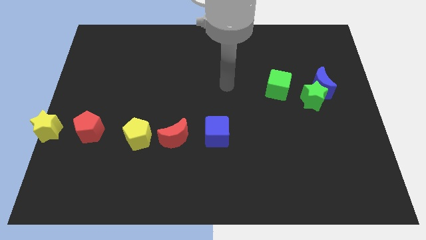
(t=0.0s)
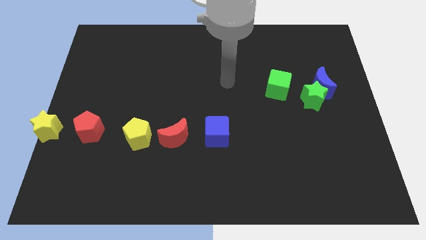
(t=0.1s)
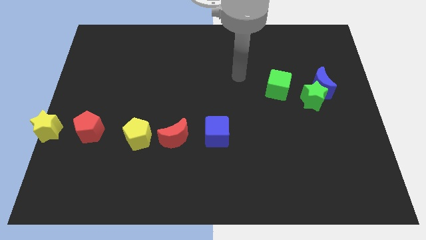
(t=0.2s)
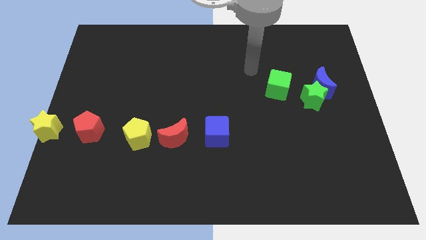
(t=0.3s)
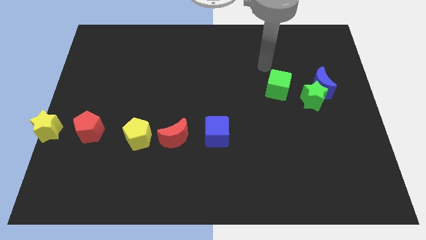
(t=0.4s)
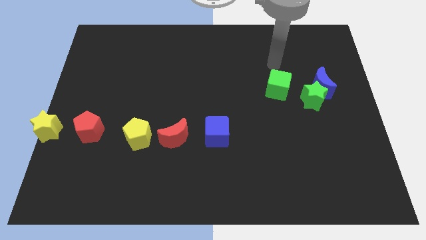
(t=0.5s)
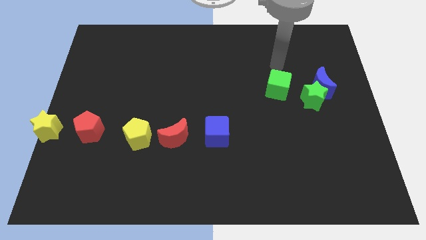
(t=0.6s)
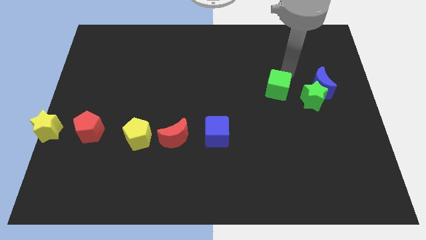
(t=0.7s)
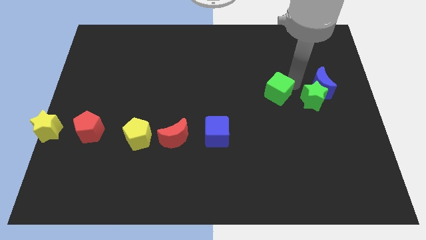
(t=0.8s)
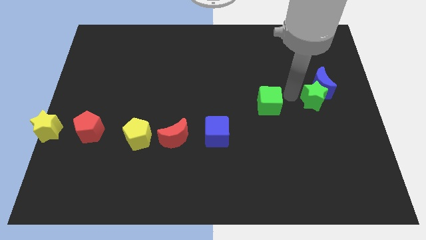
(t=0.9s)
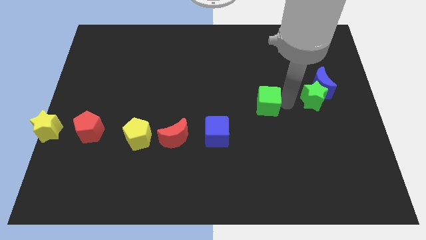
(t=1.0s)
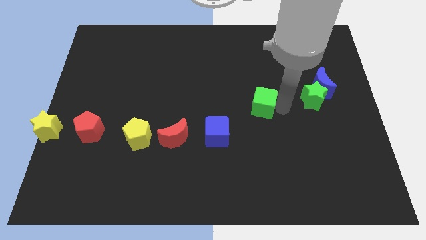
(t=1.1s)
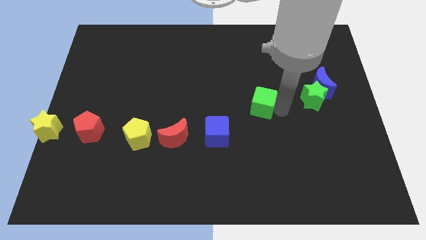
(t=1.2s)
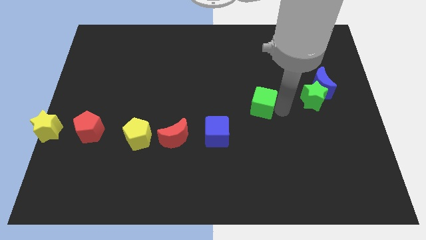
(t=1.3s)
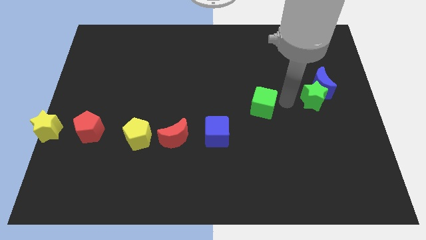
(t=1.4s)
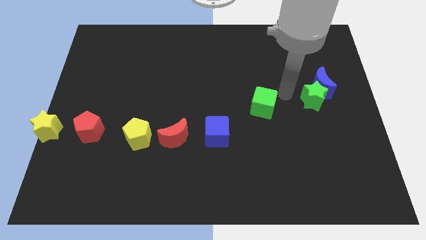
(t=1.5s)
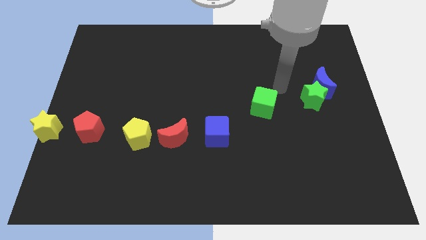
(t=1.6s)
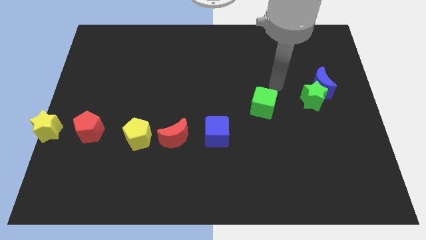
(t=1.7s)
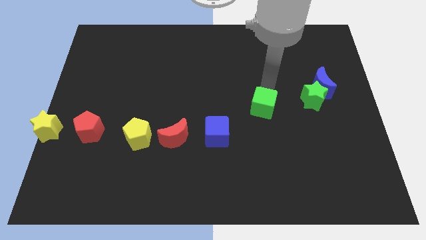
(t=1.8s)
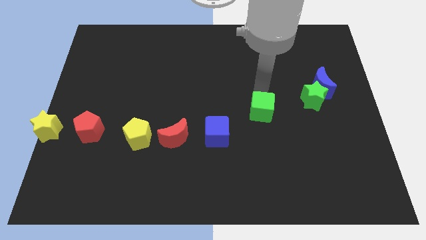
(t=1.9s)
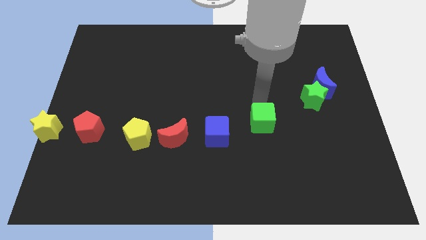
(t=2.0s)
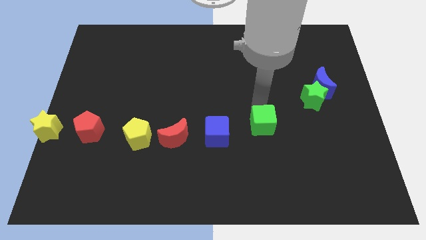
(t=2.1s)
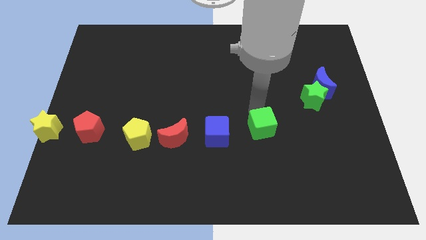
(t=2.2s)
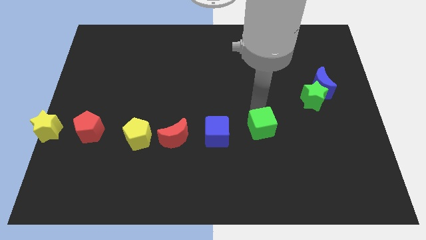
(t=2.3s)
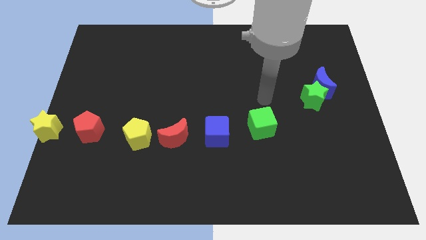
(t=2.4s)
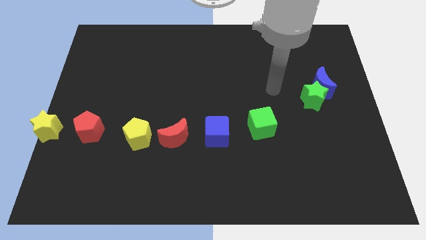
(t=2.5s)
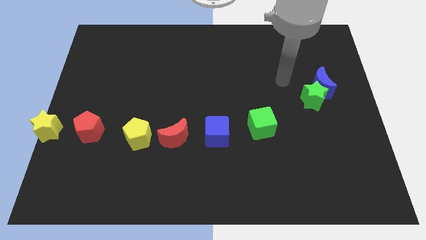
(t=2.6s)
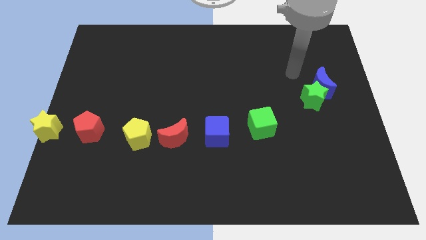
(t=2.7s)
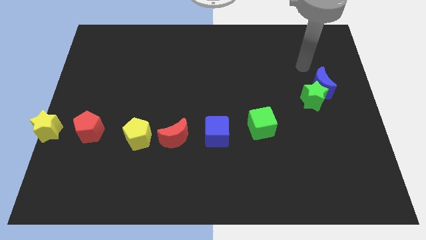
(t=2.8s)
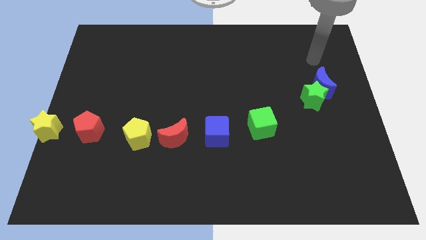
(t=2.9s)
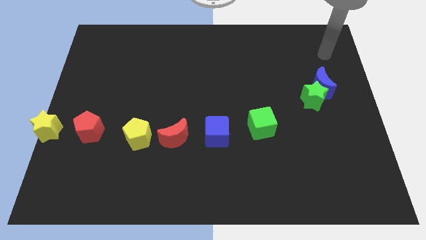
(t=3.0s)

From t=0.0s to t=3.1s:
move the green cube to the right side of the blue cube

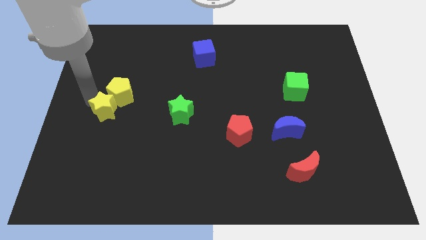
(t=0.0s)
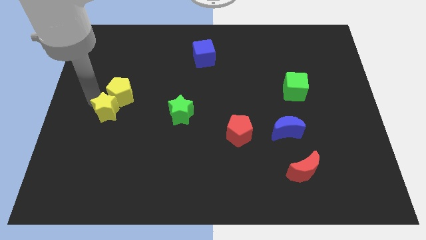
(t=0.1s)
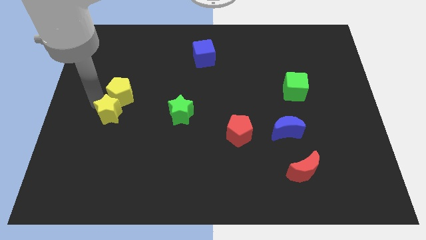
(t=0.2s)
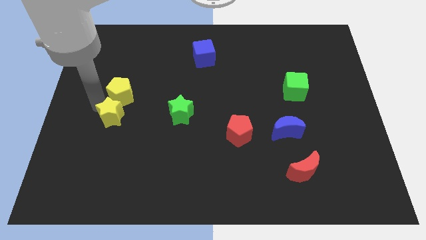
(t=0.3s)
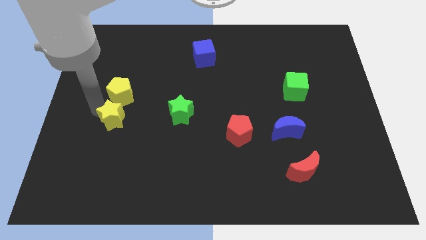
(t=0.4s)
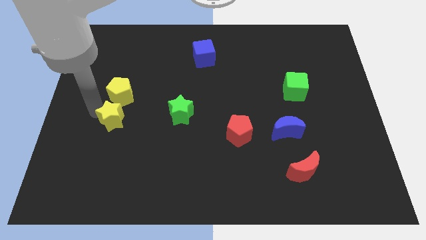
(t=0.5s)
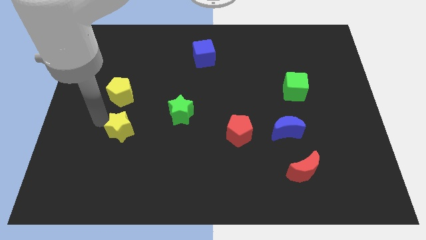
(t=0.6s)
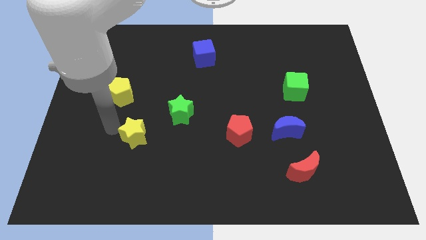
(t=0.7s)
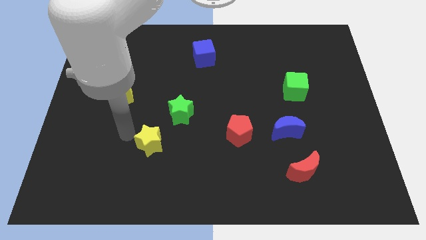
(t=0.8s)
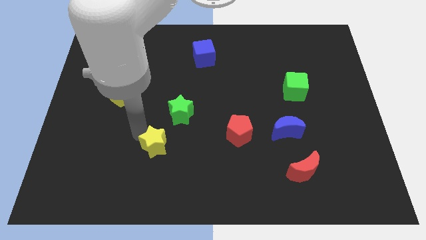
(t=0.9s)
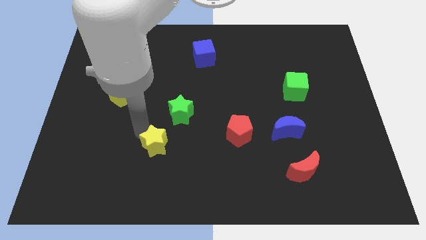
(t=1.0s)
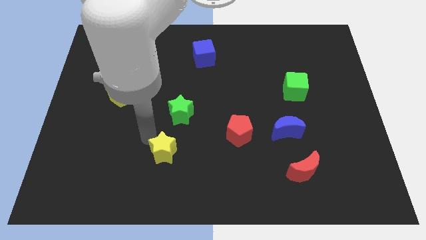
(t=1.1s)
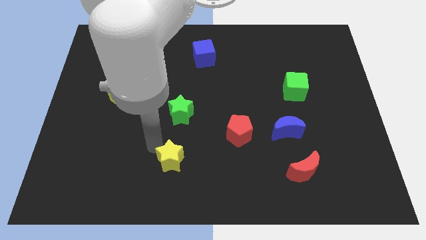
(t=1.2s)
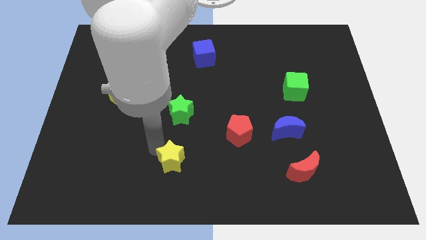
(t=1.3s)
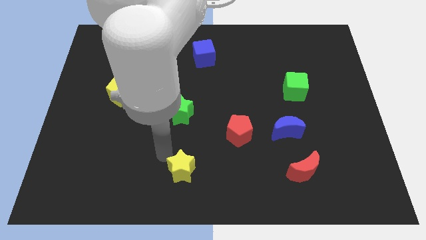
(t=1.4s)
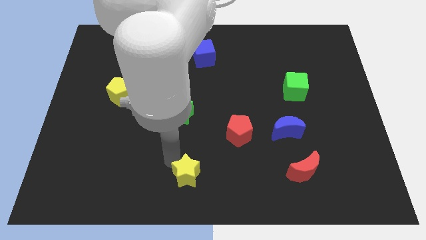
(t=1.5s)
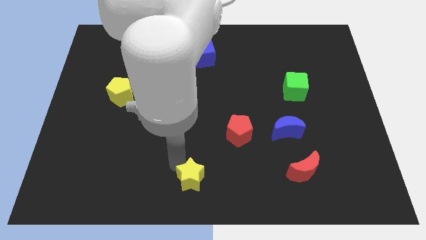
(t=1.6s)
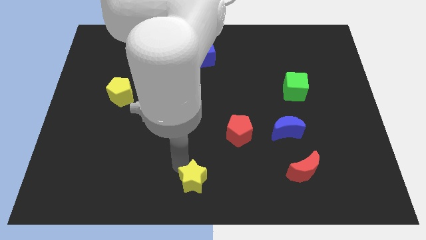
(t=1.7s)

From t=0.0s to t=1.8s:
separate the yellow star from yellow pentagon

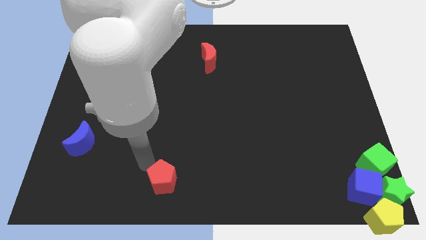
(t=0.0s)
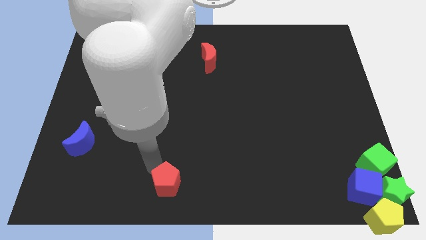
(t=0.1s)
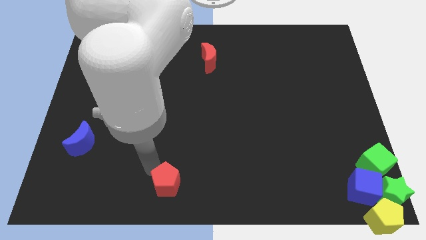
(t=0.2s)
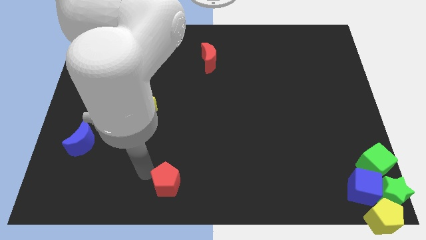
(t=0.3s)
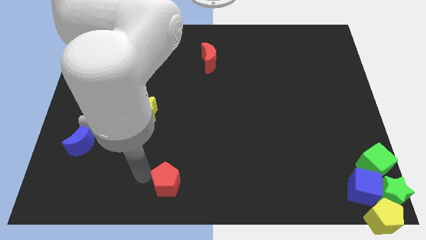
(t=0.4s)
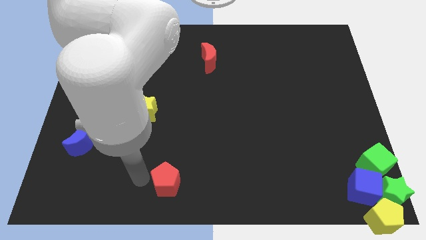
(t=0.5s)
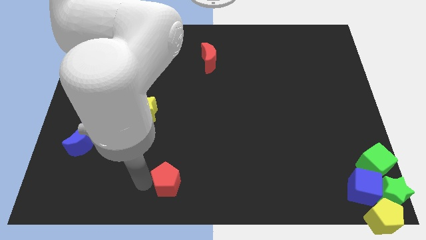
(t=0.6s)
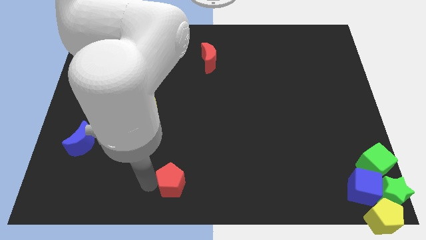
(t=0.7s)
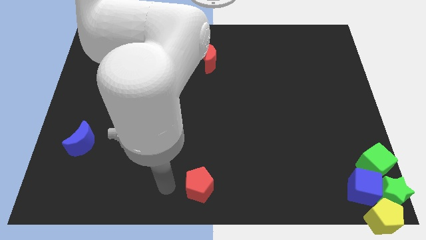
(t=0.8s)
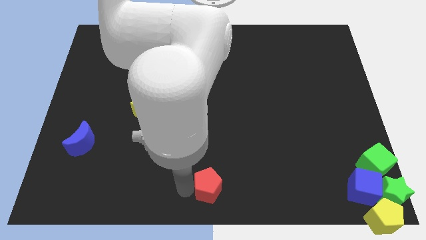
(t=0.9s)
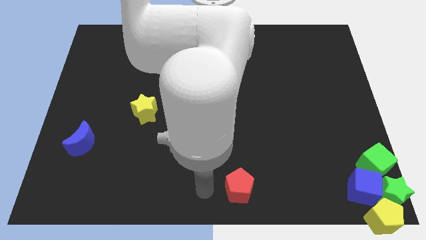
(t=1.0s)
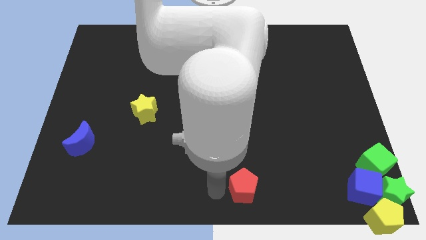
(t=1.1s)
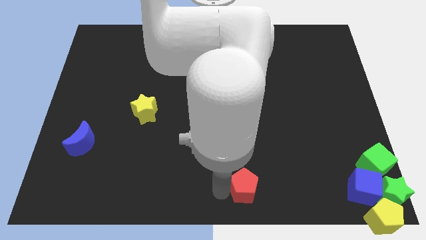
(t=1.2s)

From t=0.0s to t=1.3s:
push the red pentagon to the right of the board

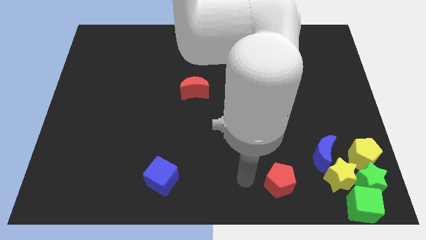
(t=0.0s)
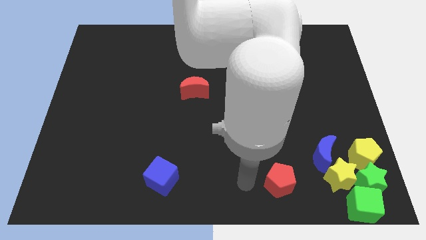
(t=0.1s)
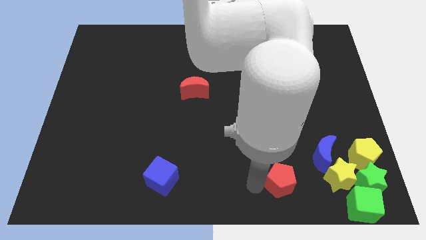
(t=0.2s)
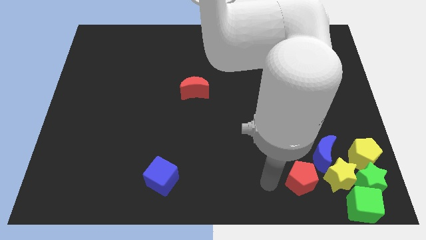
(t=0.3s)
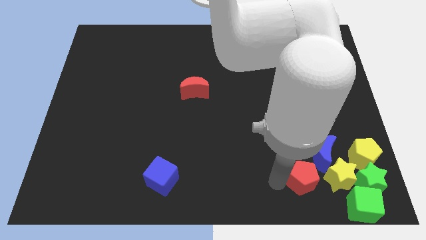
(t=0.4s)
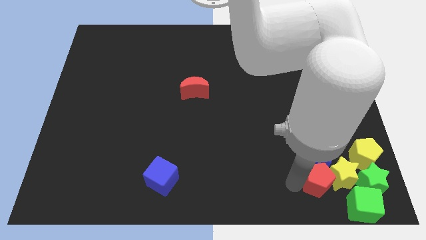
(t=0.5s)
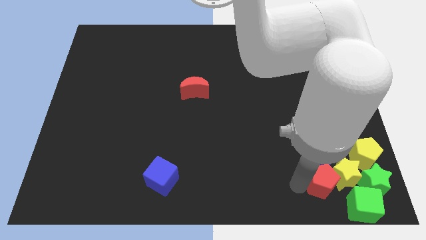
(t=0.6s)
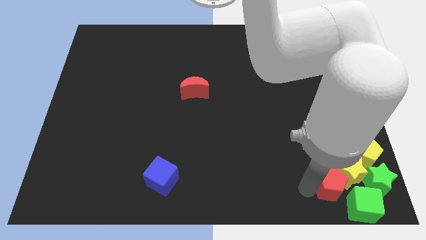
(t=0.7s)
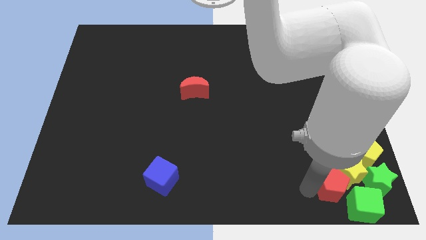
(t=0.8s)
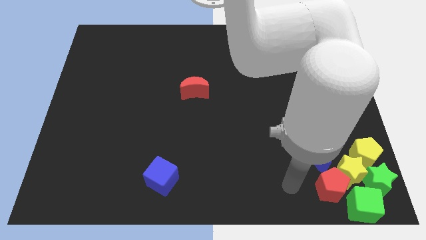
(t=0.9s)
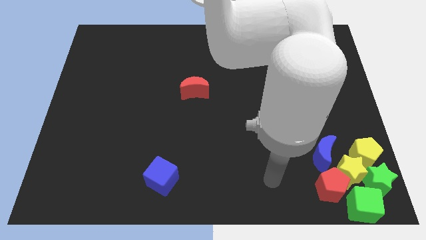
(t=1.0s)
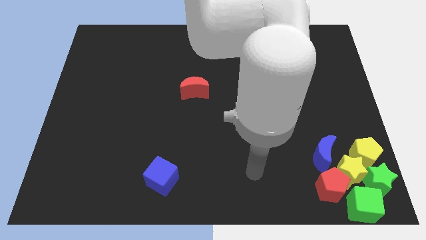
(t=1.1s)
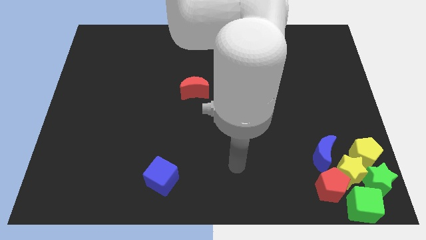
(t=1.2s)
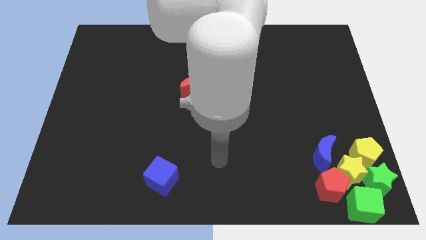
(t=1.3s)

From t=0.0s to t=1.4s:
push red pentagon into the group of blocks

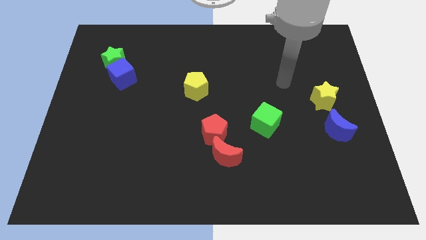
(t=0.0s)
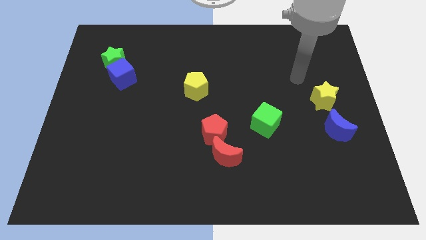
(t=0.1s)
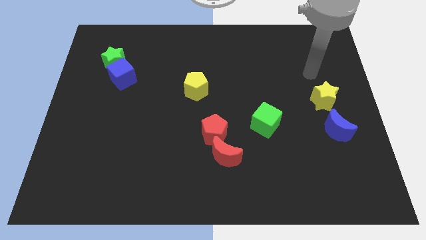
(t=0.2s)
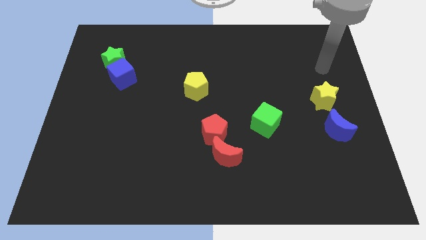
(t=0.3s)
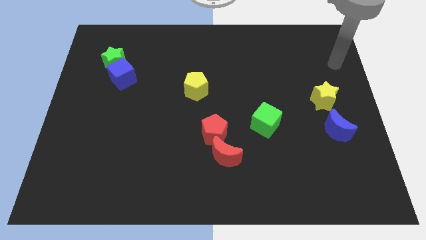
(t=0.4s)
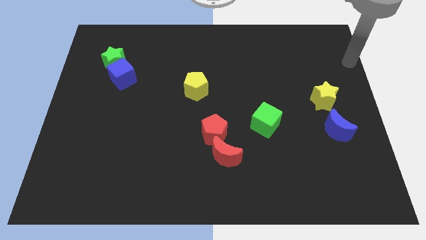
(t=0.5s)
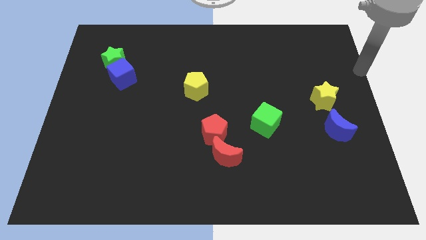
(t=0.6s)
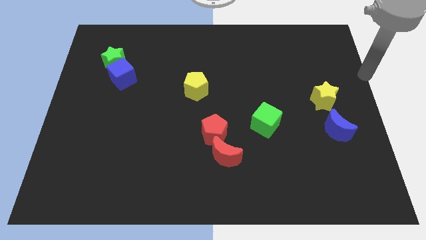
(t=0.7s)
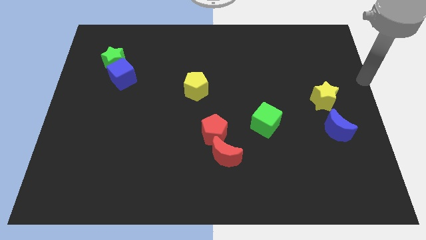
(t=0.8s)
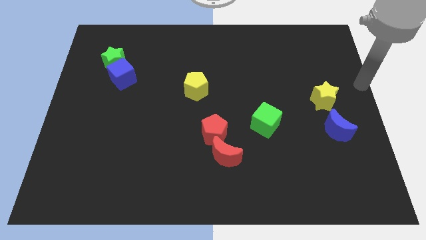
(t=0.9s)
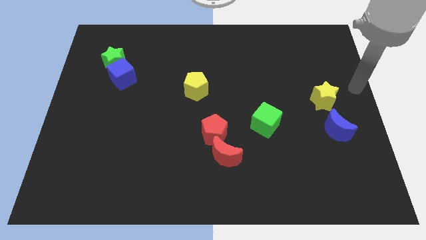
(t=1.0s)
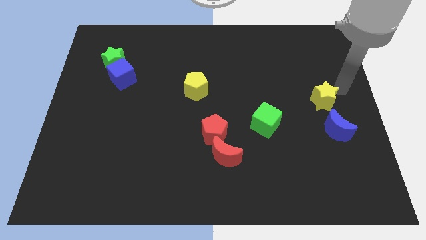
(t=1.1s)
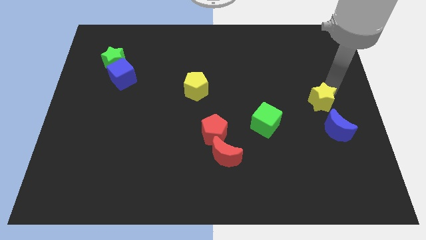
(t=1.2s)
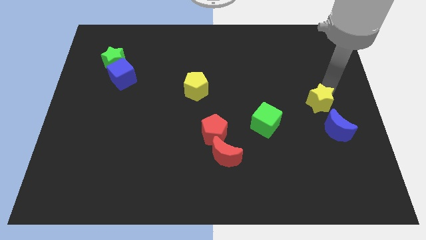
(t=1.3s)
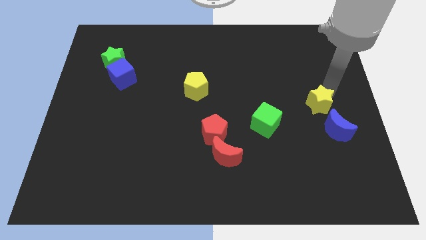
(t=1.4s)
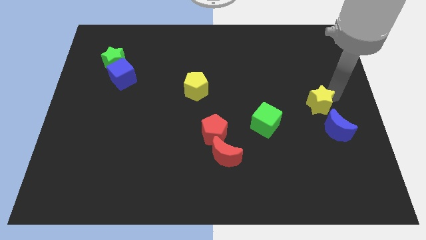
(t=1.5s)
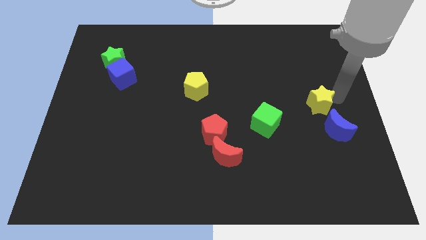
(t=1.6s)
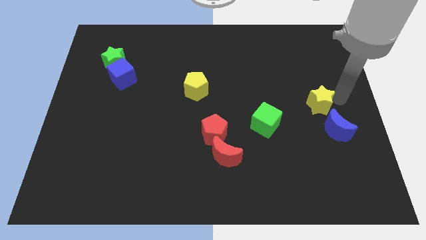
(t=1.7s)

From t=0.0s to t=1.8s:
move your arm right to the yellow star
